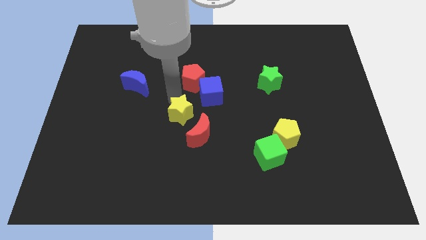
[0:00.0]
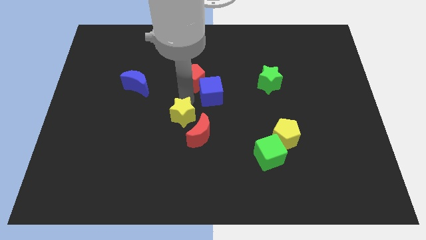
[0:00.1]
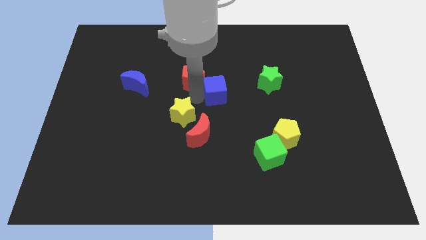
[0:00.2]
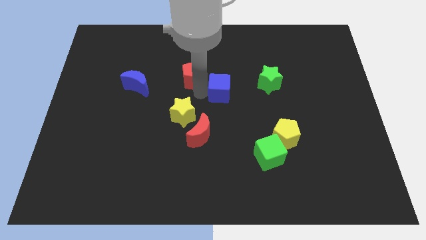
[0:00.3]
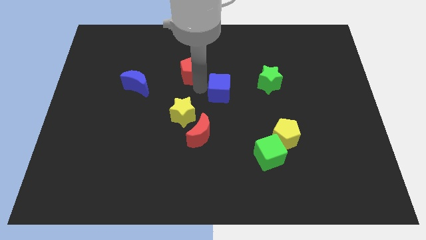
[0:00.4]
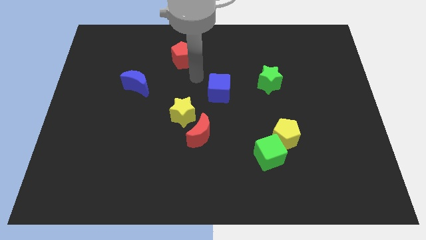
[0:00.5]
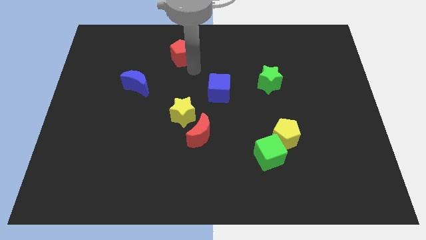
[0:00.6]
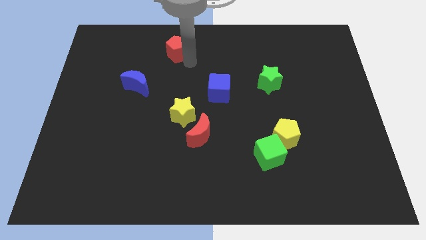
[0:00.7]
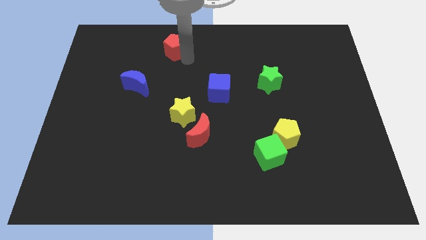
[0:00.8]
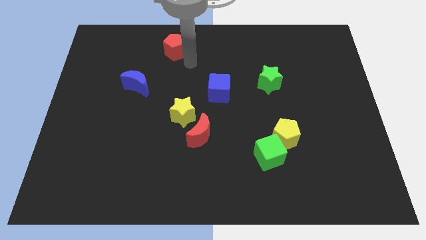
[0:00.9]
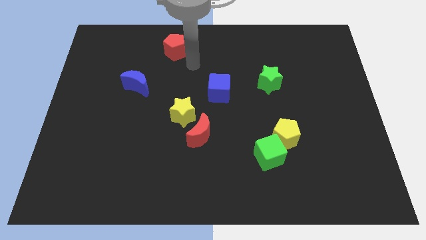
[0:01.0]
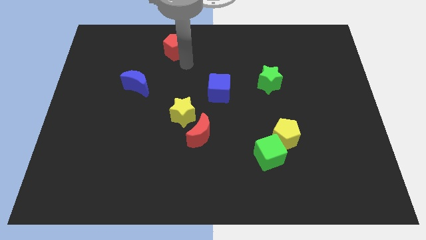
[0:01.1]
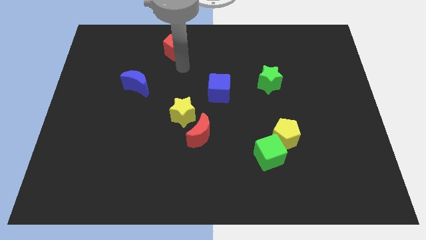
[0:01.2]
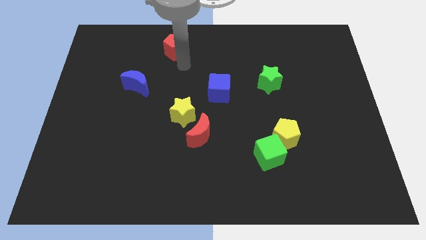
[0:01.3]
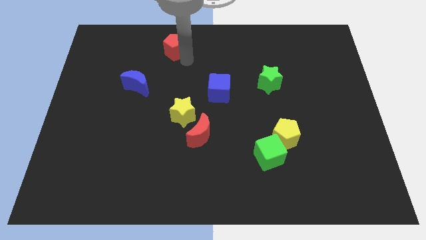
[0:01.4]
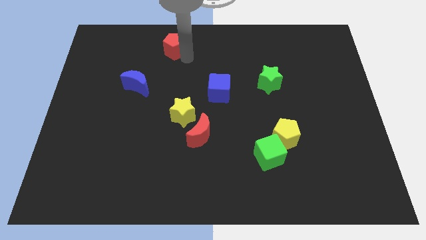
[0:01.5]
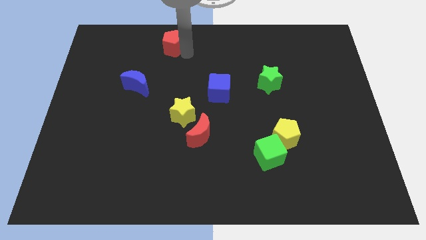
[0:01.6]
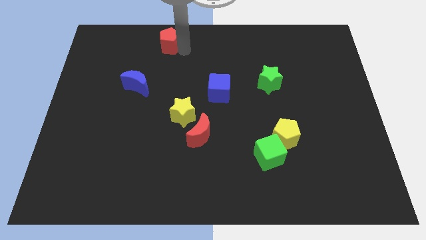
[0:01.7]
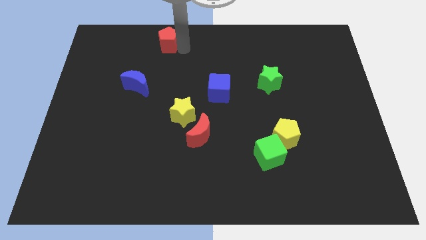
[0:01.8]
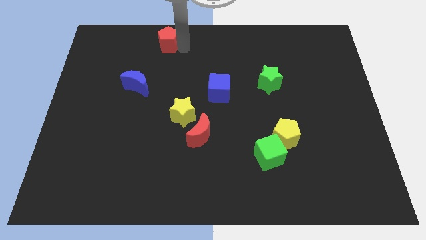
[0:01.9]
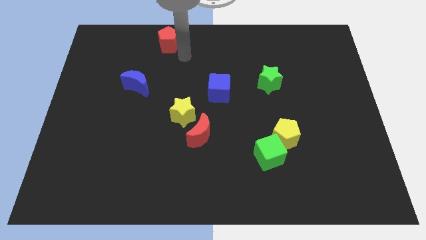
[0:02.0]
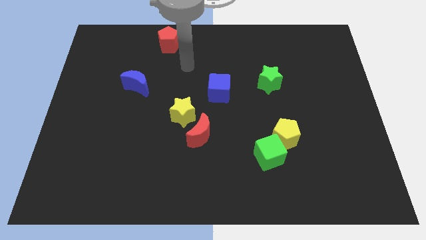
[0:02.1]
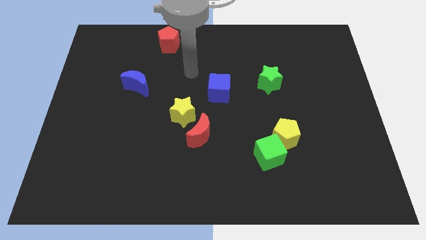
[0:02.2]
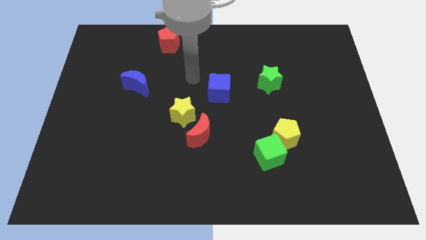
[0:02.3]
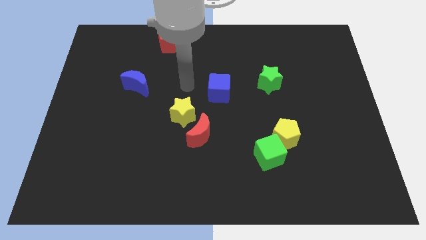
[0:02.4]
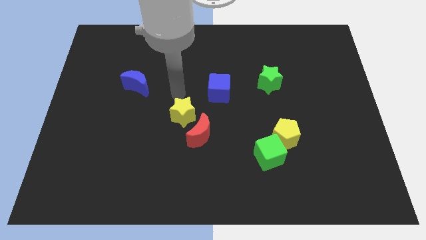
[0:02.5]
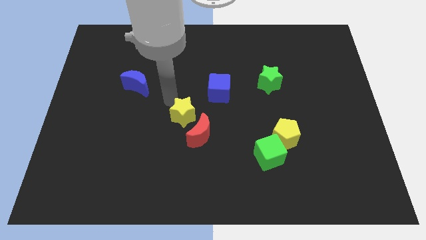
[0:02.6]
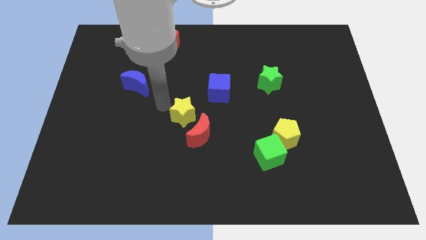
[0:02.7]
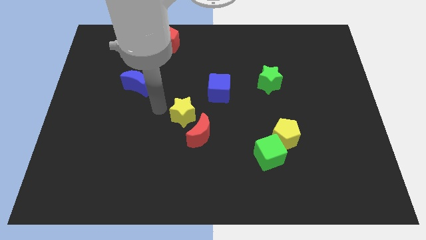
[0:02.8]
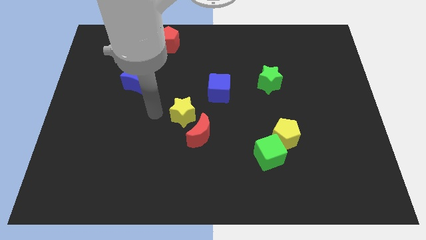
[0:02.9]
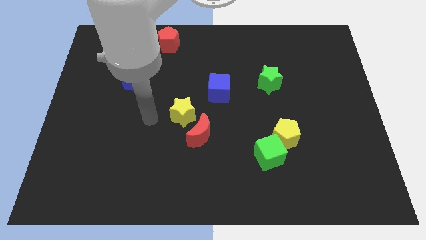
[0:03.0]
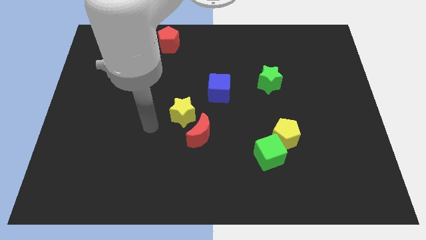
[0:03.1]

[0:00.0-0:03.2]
move the red pentagon towards the top of the board

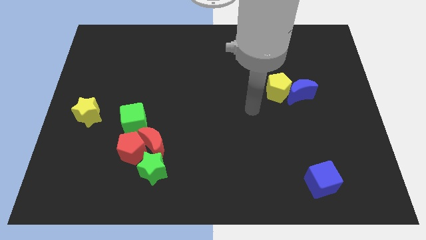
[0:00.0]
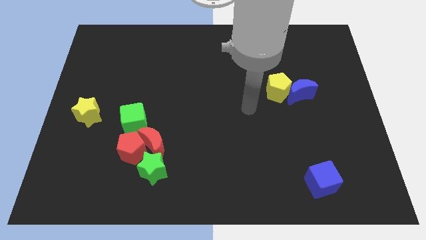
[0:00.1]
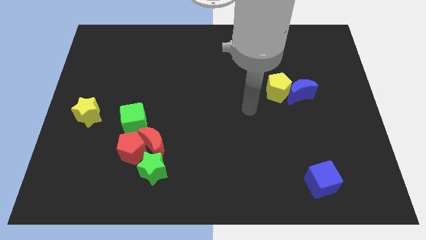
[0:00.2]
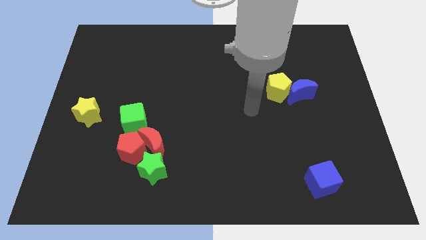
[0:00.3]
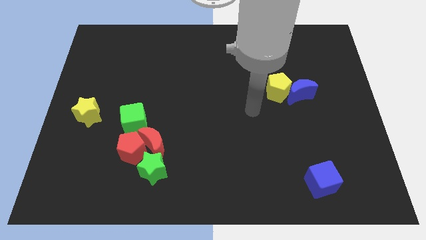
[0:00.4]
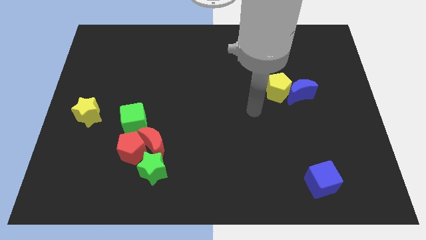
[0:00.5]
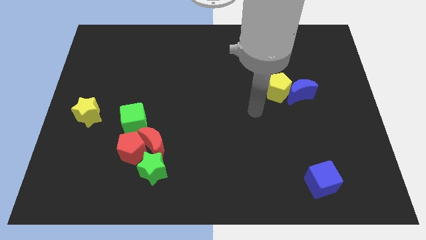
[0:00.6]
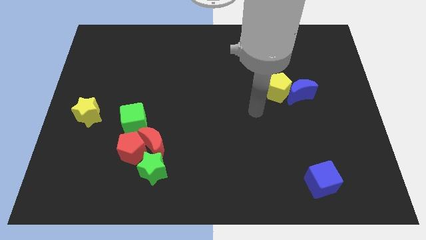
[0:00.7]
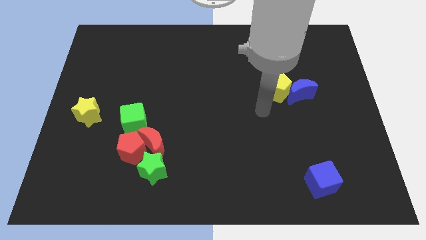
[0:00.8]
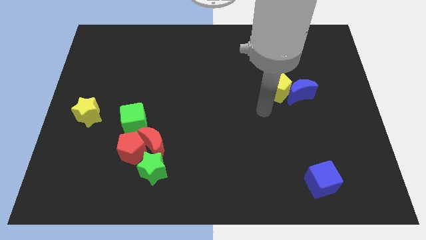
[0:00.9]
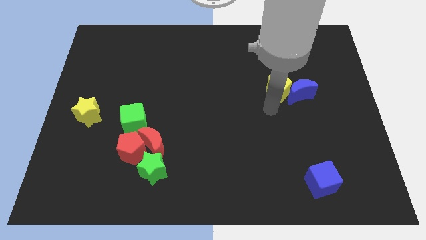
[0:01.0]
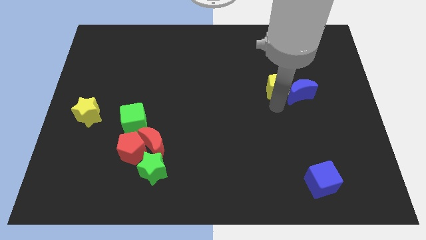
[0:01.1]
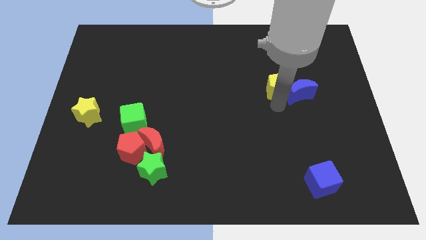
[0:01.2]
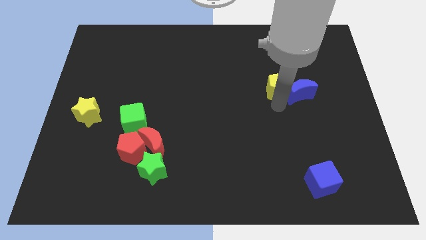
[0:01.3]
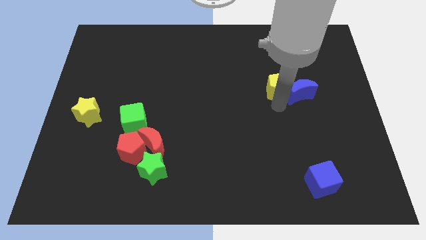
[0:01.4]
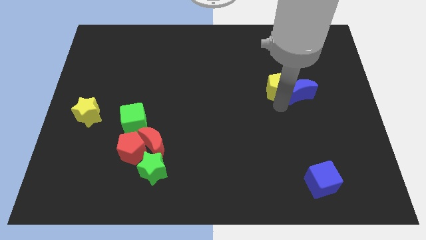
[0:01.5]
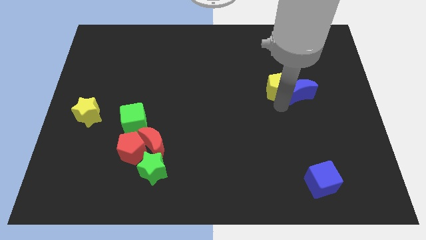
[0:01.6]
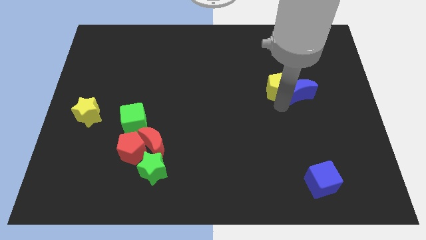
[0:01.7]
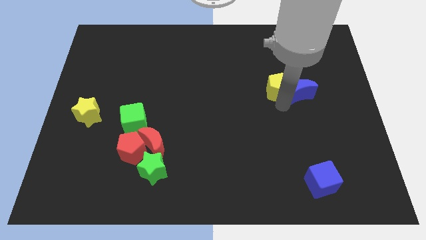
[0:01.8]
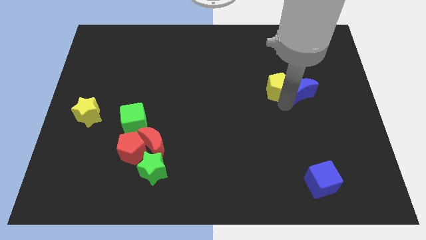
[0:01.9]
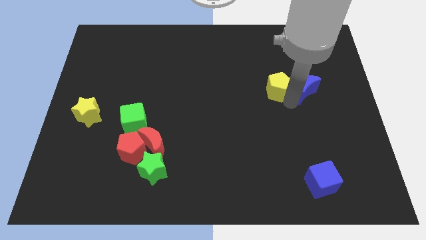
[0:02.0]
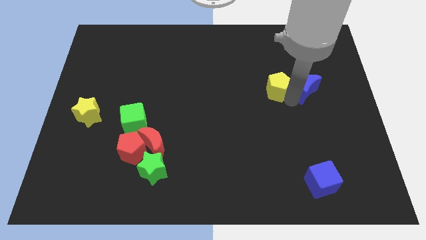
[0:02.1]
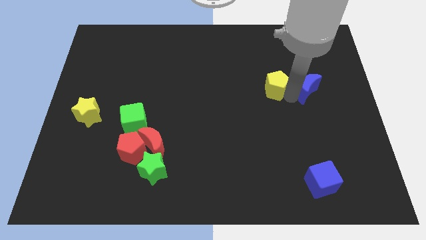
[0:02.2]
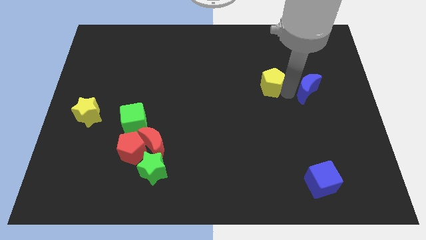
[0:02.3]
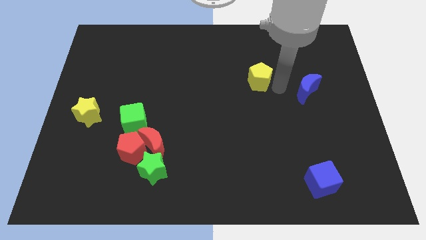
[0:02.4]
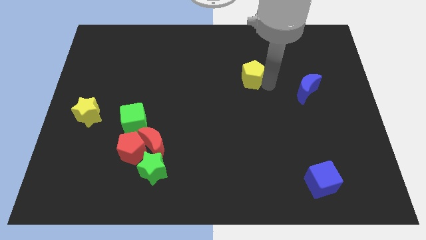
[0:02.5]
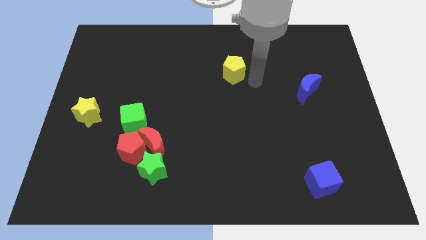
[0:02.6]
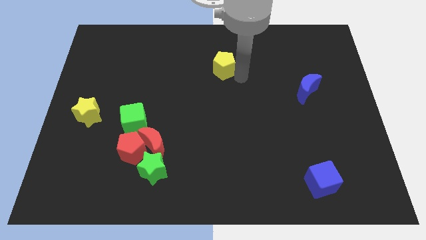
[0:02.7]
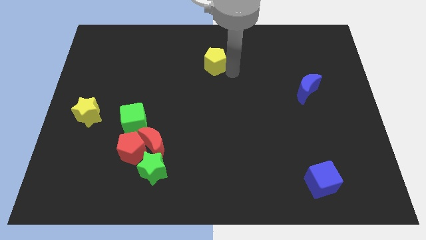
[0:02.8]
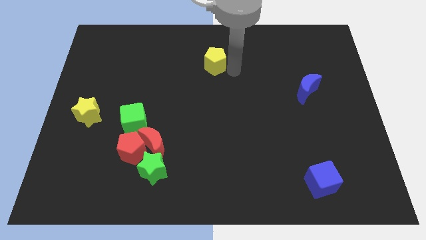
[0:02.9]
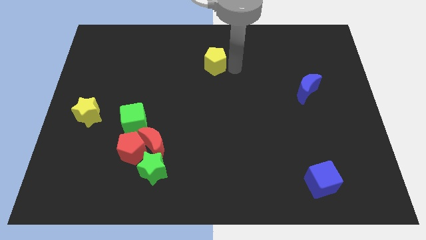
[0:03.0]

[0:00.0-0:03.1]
separate the yellow pentagon and the blue crescent

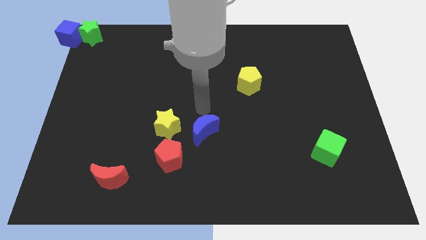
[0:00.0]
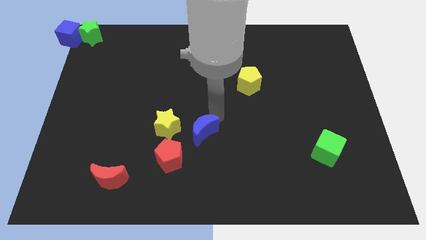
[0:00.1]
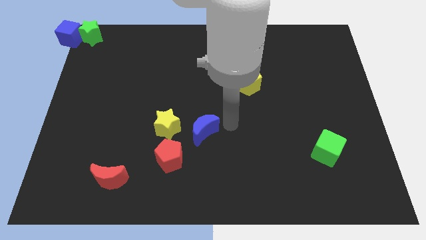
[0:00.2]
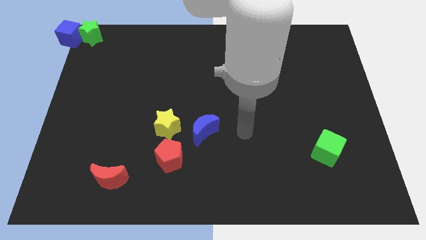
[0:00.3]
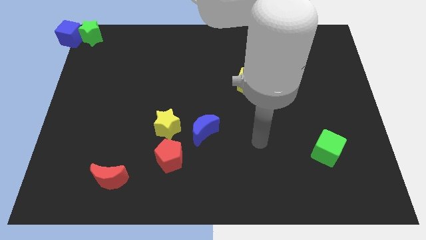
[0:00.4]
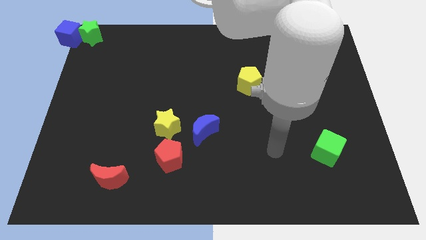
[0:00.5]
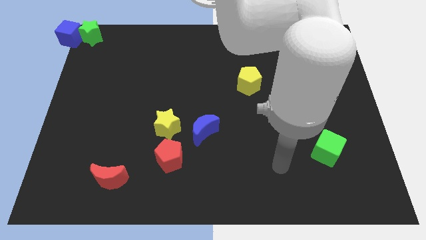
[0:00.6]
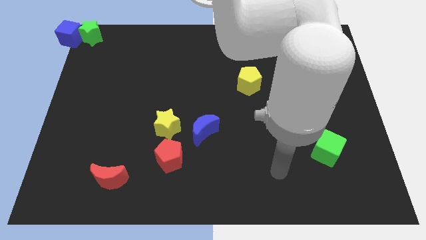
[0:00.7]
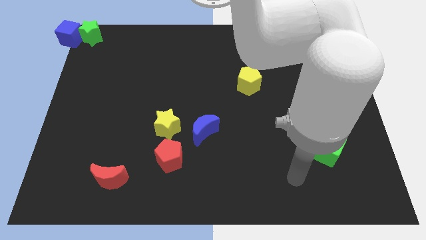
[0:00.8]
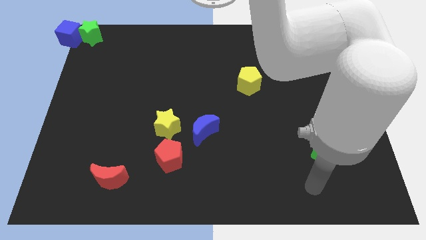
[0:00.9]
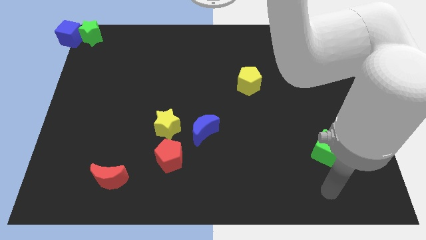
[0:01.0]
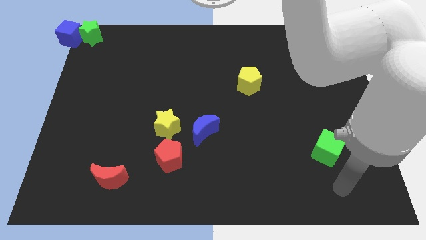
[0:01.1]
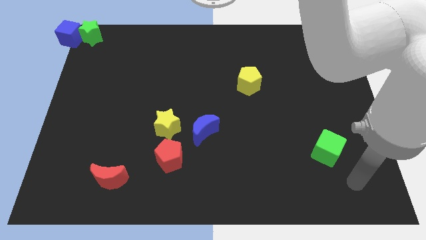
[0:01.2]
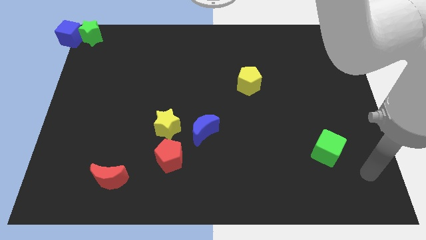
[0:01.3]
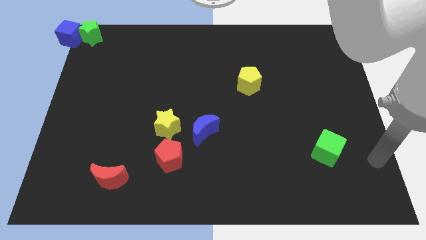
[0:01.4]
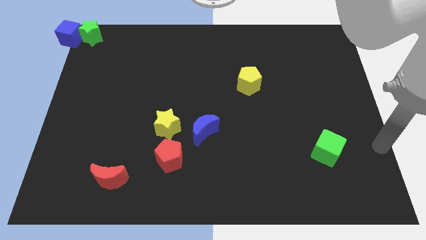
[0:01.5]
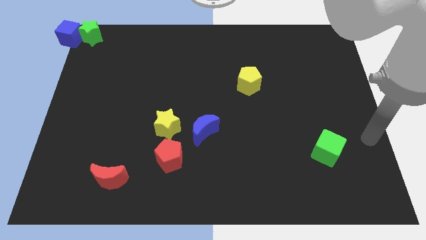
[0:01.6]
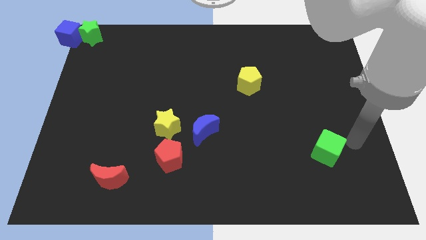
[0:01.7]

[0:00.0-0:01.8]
place your arm at the right of the green cube

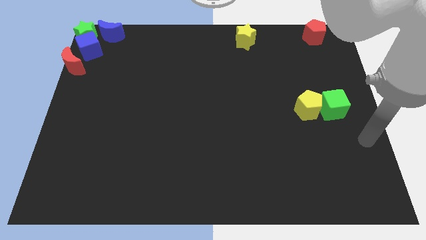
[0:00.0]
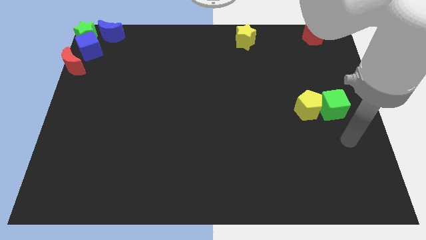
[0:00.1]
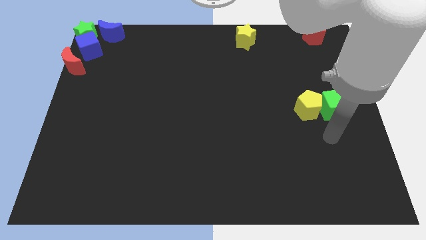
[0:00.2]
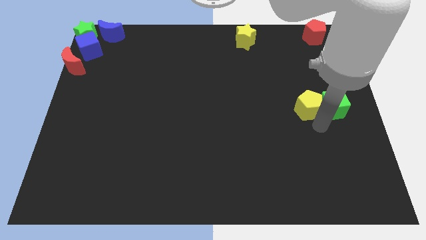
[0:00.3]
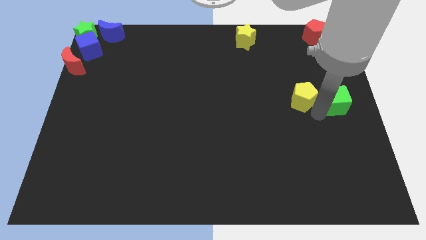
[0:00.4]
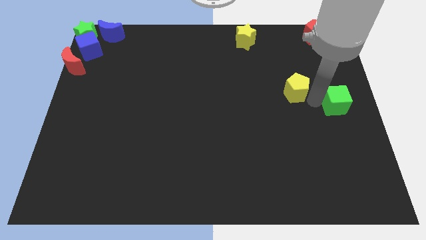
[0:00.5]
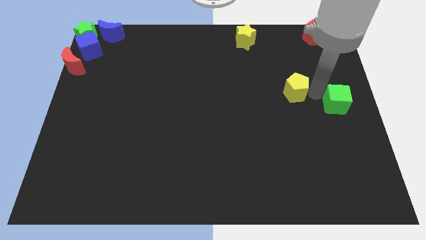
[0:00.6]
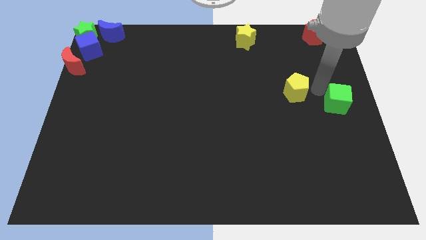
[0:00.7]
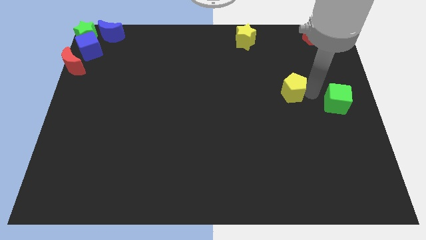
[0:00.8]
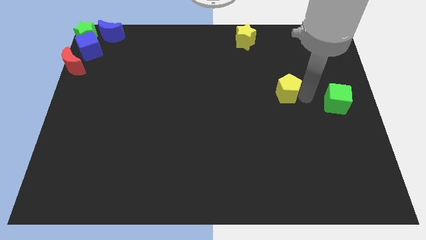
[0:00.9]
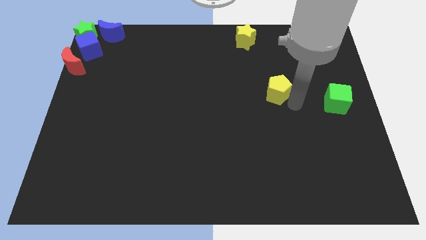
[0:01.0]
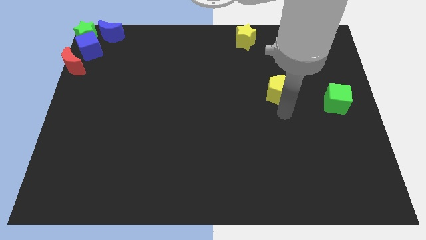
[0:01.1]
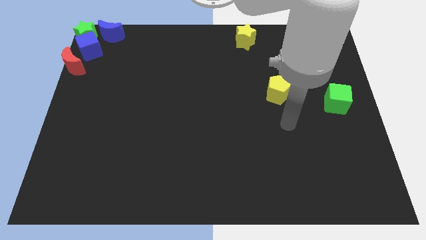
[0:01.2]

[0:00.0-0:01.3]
move the yellow pentagon away from the green cube
